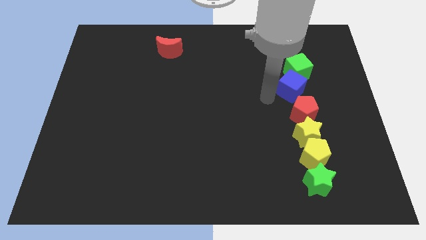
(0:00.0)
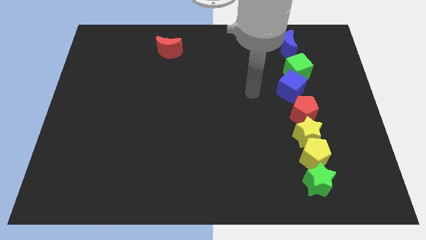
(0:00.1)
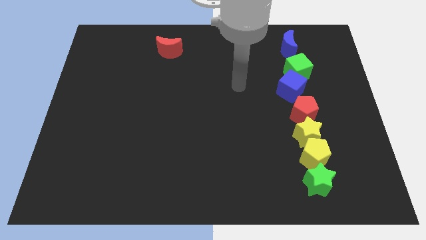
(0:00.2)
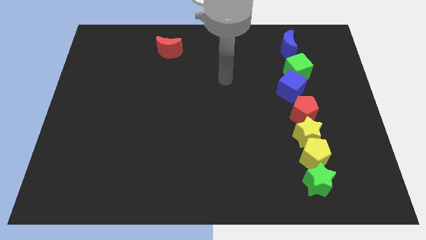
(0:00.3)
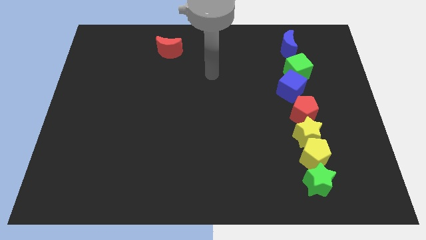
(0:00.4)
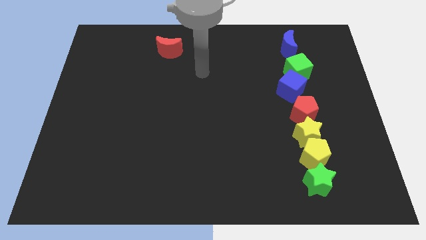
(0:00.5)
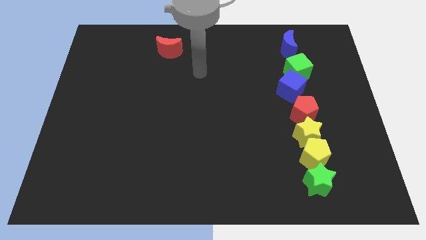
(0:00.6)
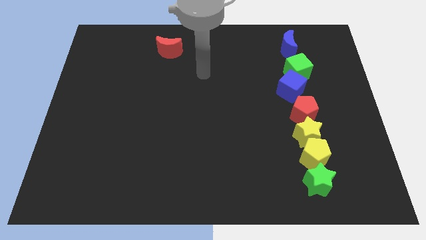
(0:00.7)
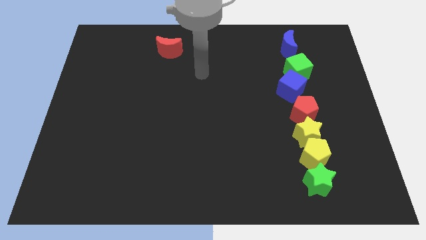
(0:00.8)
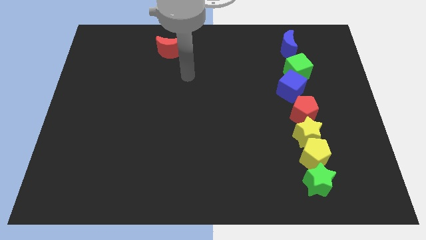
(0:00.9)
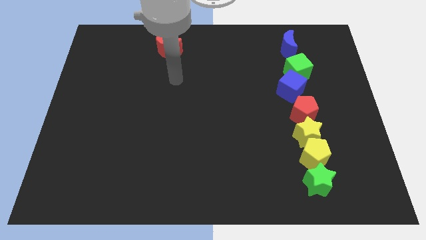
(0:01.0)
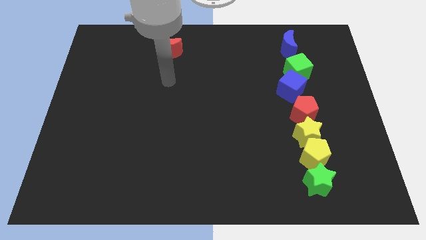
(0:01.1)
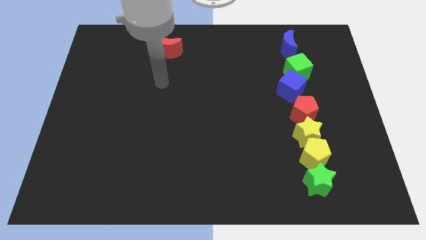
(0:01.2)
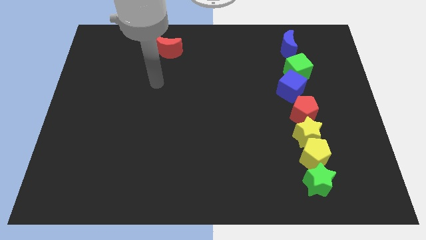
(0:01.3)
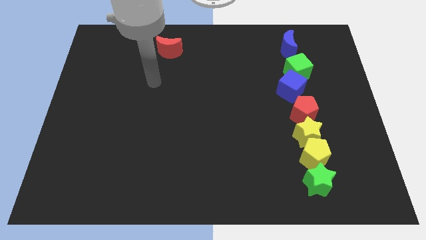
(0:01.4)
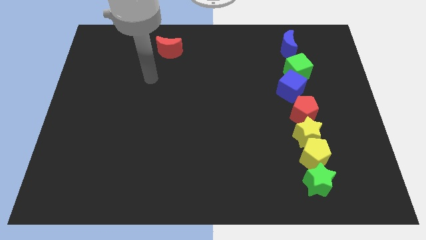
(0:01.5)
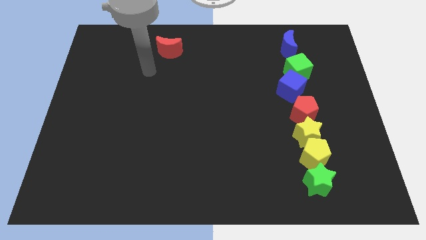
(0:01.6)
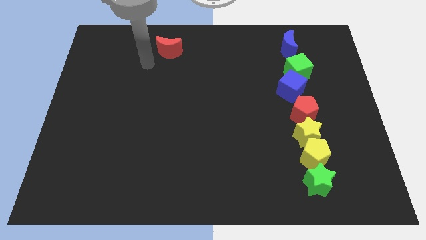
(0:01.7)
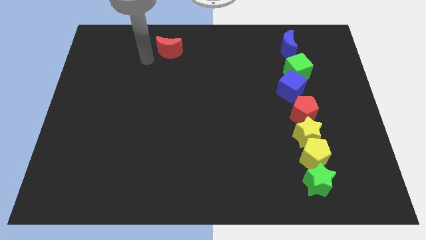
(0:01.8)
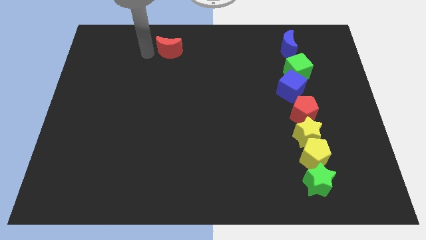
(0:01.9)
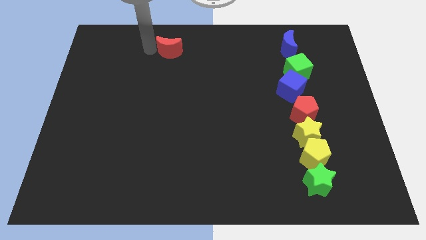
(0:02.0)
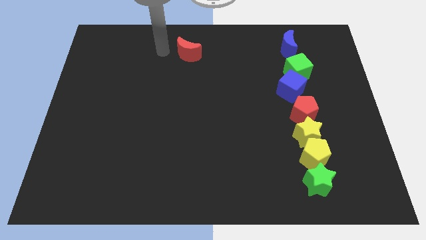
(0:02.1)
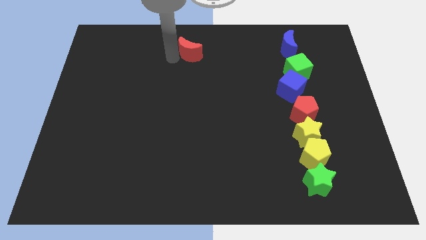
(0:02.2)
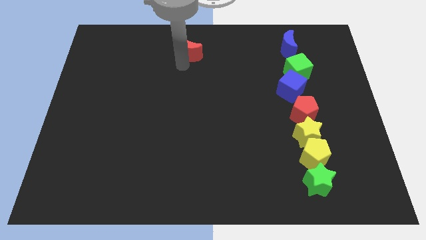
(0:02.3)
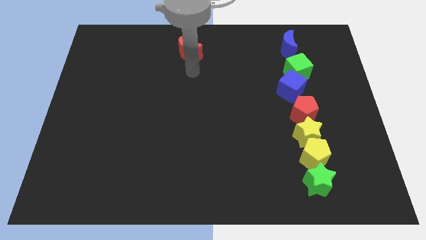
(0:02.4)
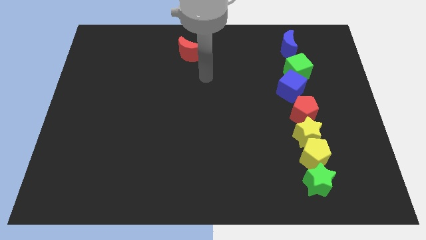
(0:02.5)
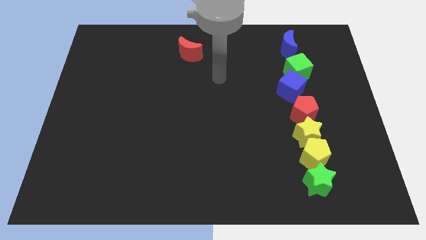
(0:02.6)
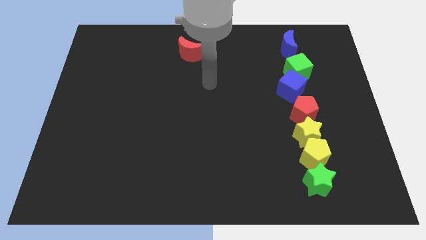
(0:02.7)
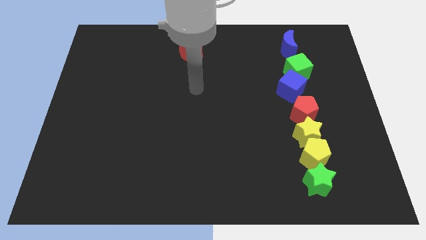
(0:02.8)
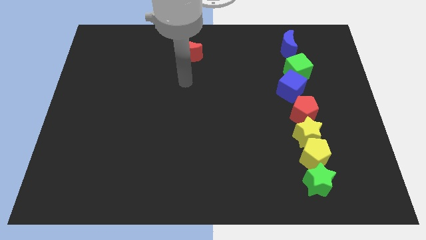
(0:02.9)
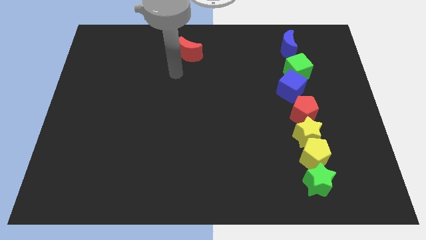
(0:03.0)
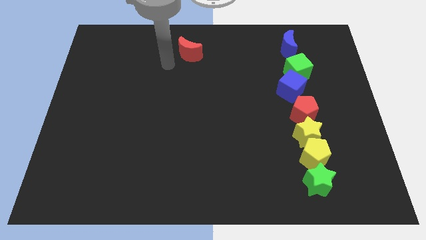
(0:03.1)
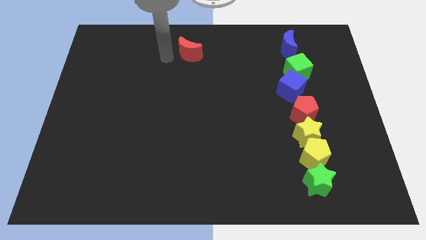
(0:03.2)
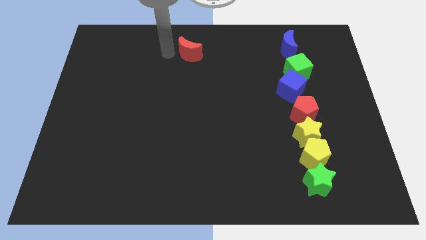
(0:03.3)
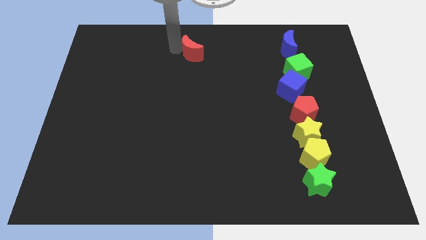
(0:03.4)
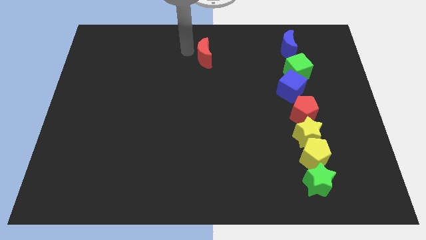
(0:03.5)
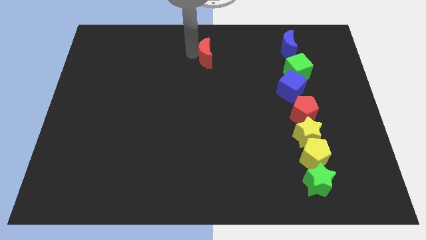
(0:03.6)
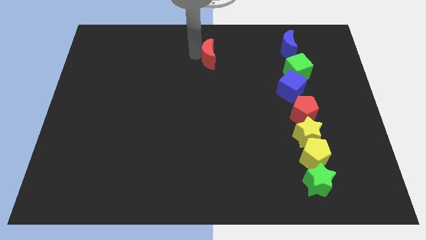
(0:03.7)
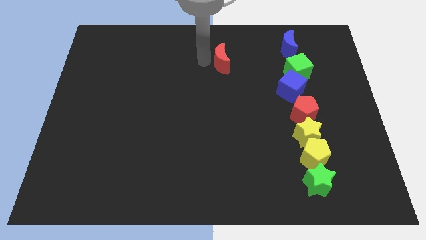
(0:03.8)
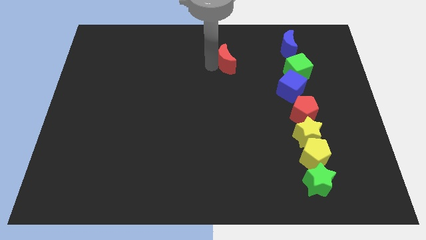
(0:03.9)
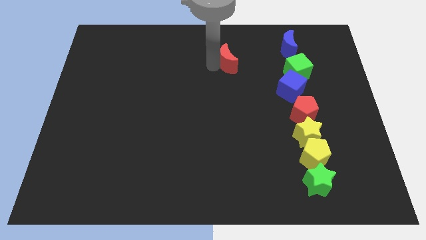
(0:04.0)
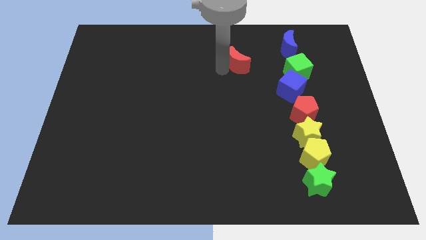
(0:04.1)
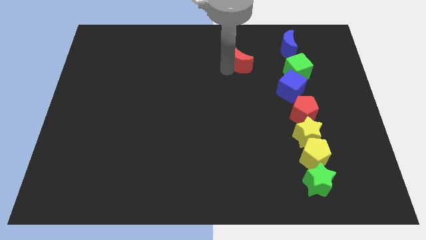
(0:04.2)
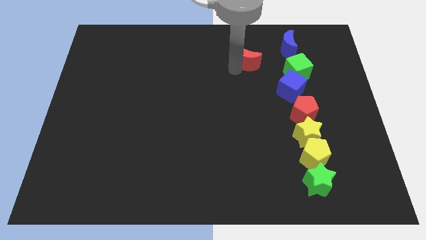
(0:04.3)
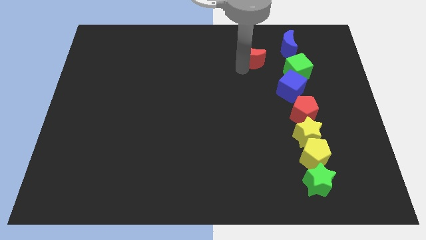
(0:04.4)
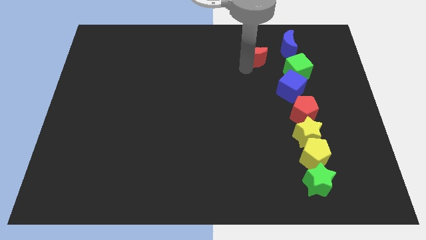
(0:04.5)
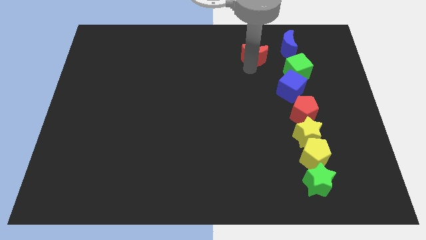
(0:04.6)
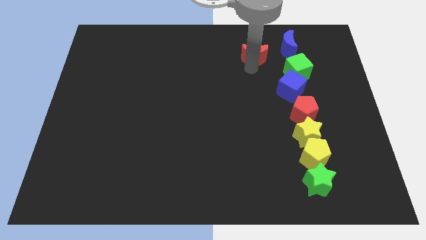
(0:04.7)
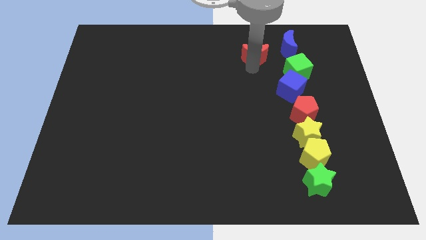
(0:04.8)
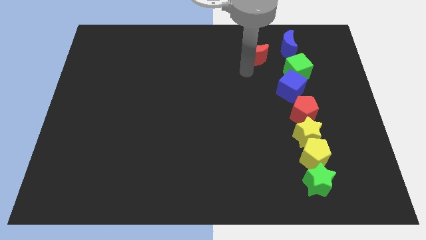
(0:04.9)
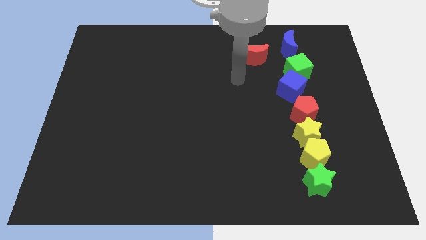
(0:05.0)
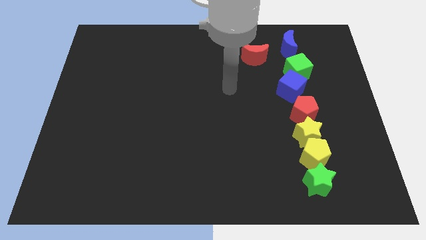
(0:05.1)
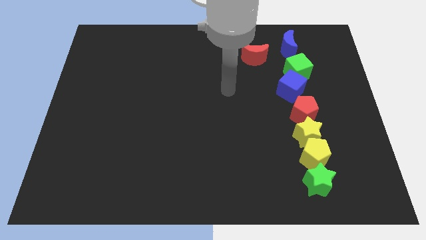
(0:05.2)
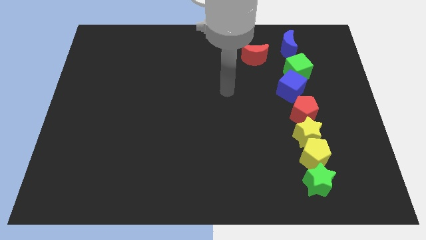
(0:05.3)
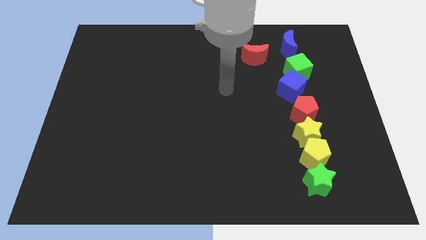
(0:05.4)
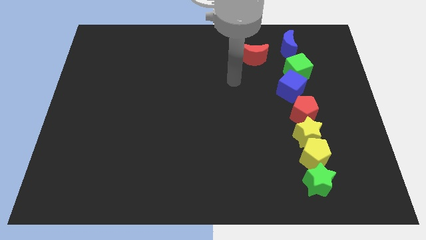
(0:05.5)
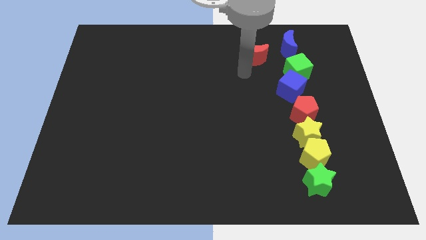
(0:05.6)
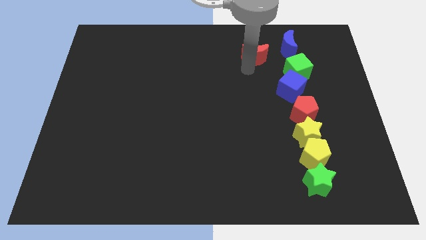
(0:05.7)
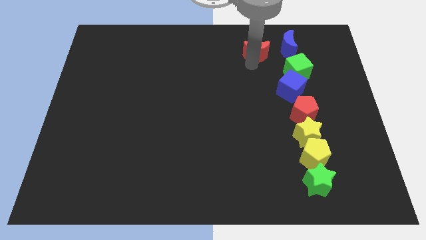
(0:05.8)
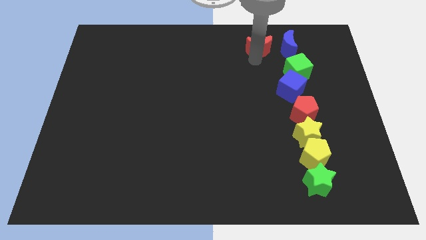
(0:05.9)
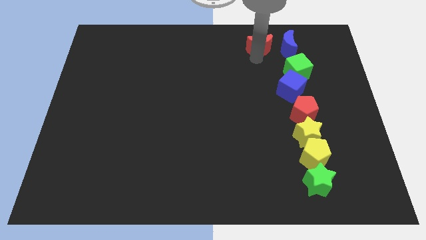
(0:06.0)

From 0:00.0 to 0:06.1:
put the red moon parallel left to the blue crescent

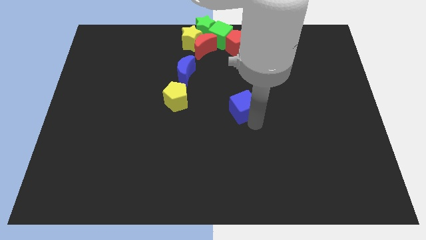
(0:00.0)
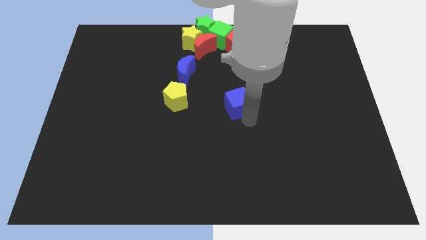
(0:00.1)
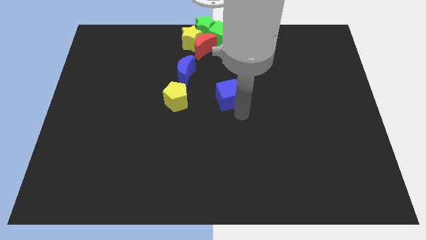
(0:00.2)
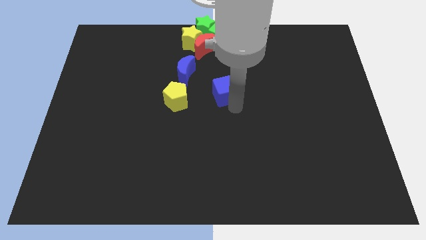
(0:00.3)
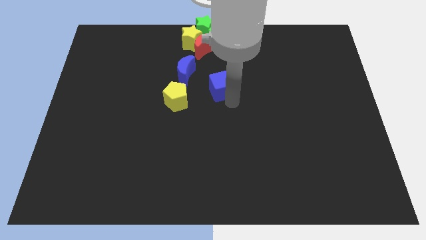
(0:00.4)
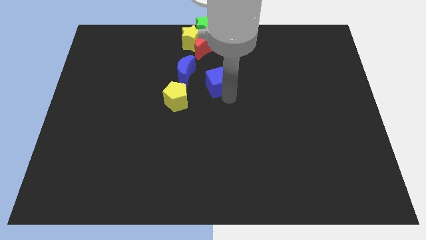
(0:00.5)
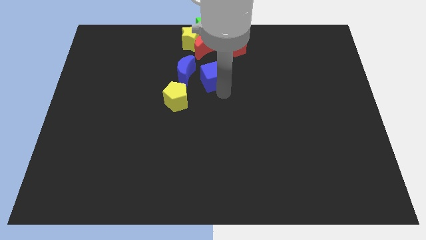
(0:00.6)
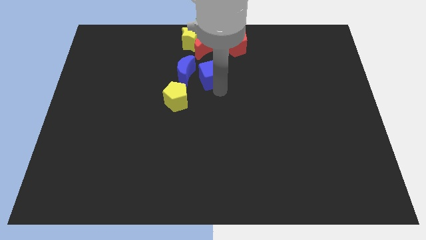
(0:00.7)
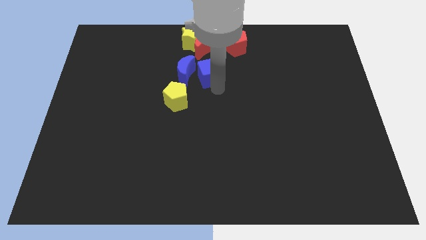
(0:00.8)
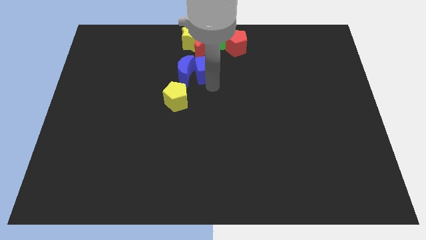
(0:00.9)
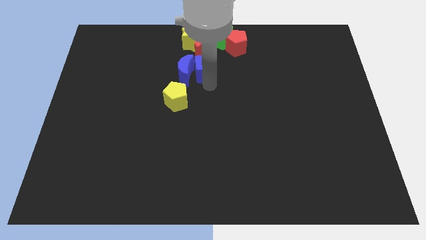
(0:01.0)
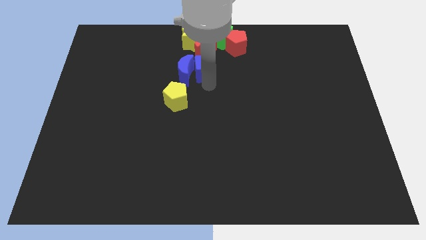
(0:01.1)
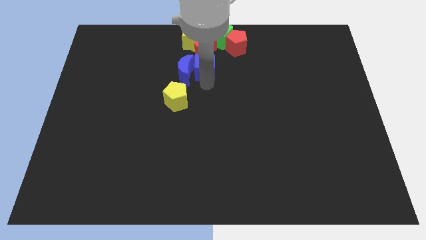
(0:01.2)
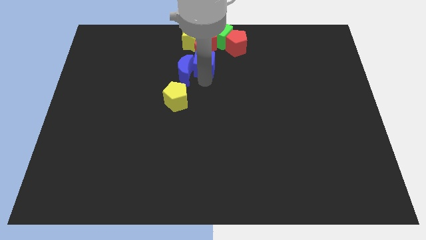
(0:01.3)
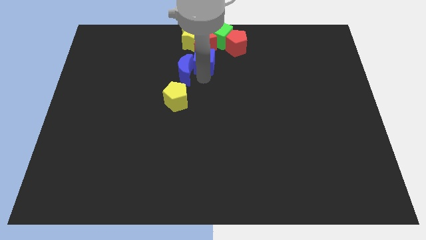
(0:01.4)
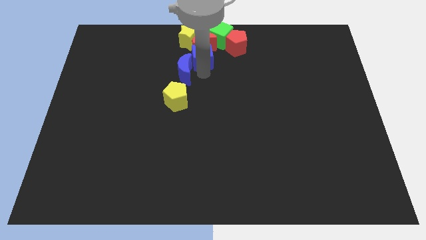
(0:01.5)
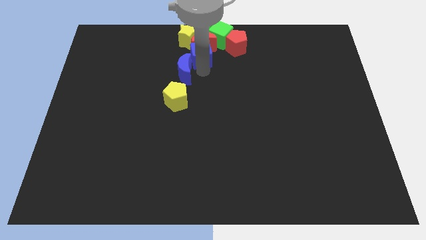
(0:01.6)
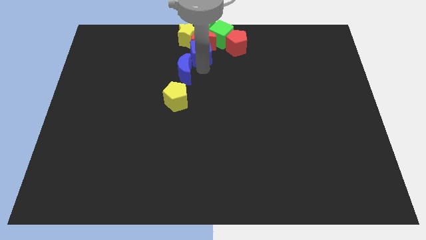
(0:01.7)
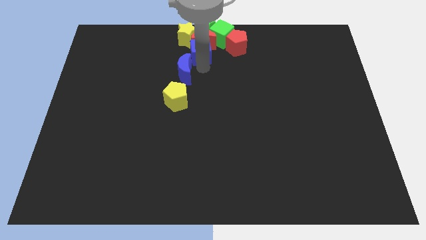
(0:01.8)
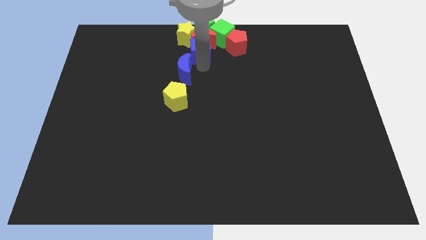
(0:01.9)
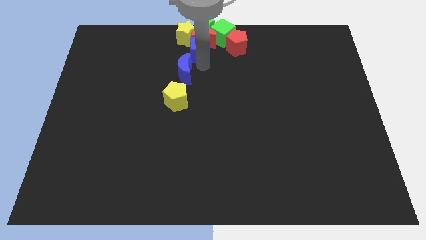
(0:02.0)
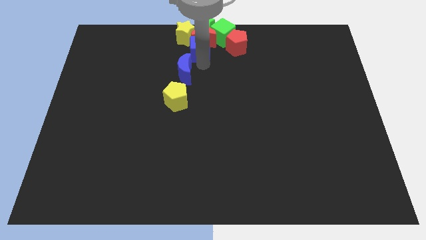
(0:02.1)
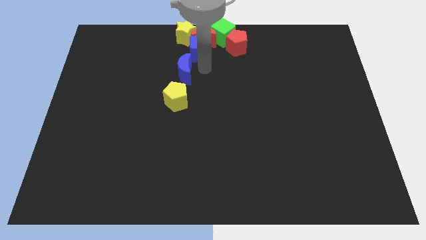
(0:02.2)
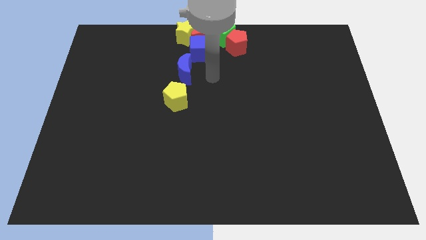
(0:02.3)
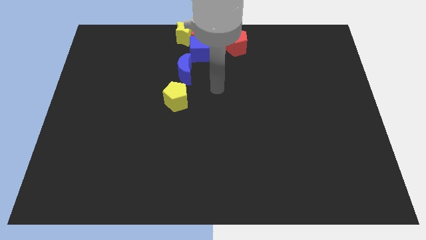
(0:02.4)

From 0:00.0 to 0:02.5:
drag the blue cube into the group of blocks at the top center

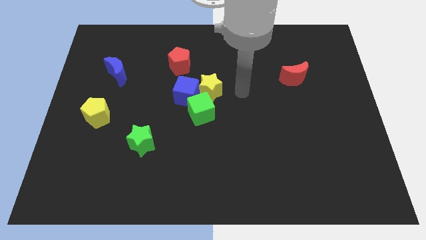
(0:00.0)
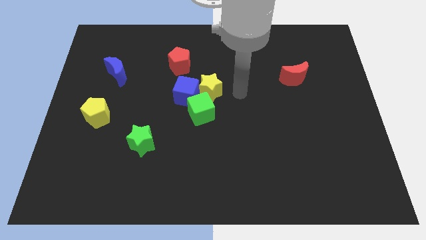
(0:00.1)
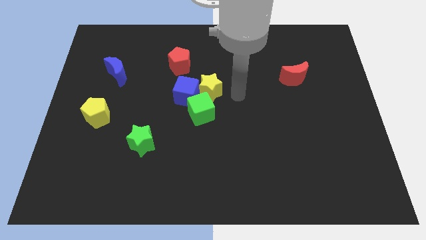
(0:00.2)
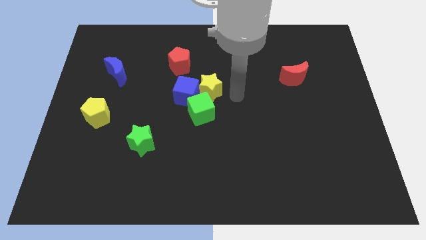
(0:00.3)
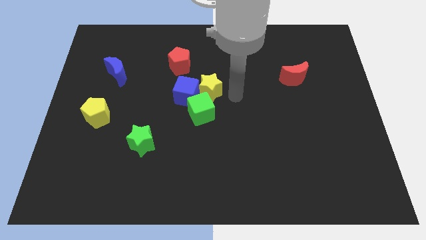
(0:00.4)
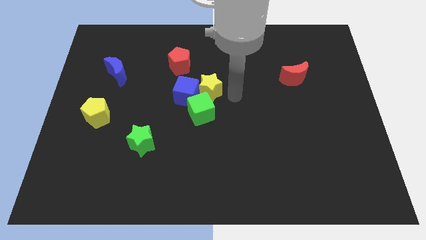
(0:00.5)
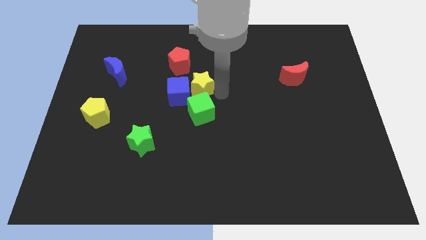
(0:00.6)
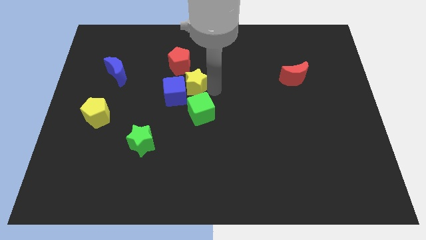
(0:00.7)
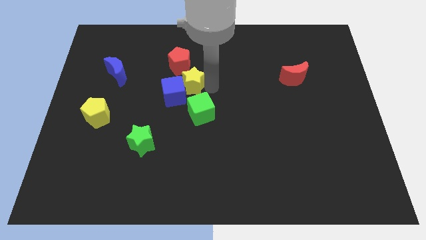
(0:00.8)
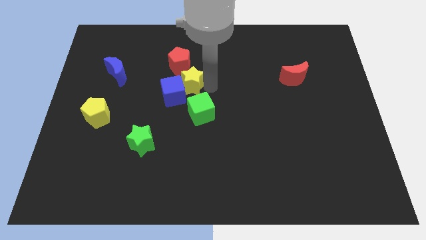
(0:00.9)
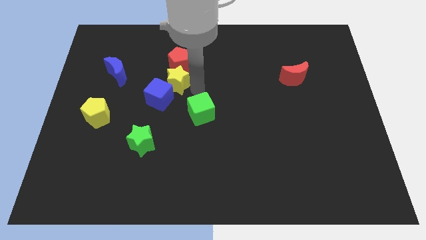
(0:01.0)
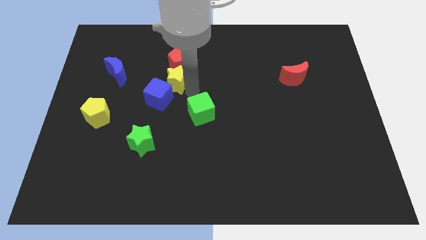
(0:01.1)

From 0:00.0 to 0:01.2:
place yellow star to the bottom of red pentagon
